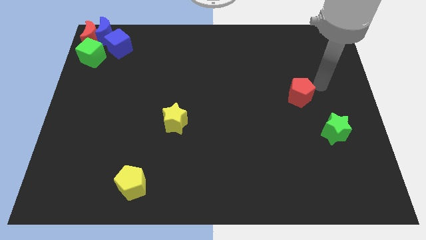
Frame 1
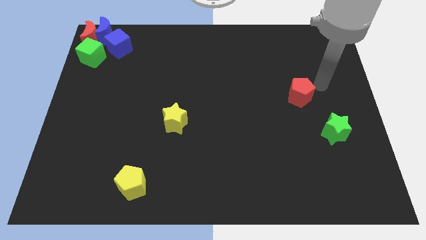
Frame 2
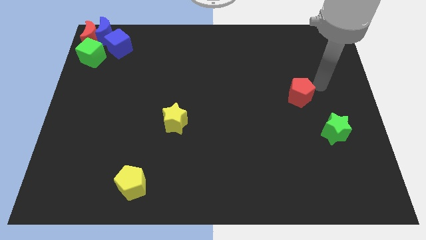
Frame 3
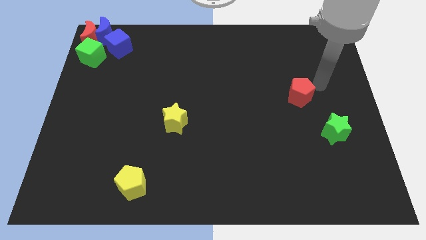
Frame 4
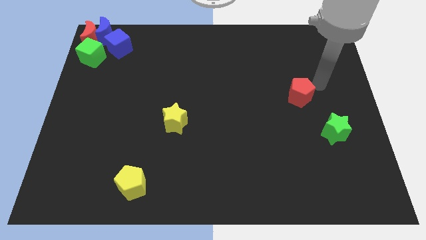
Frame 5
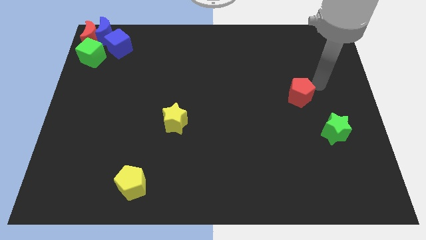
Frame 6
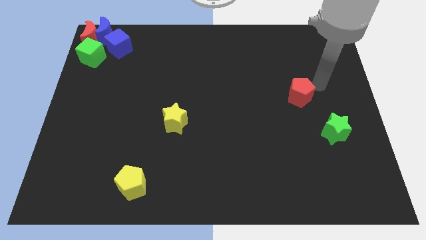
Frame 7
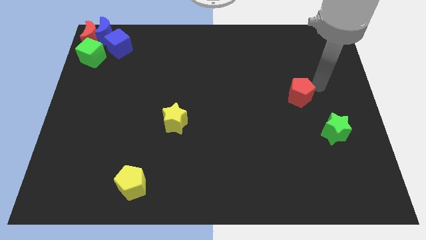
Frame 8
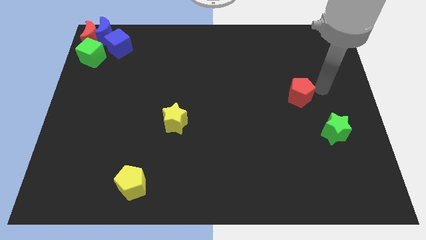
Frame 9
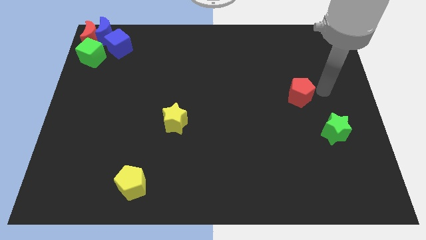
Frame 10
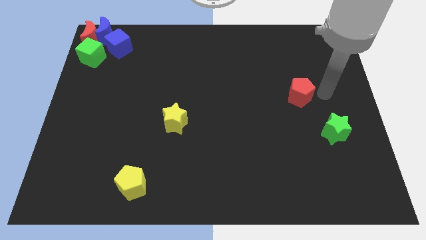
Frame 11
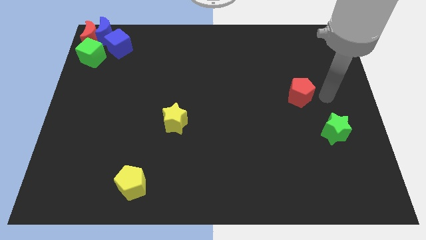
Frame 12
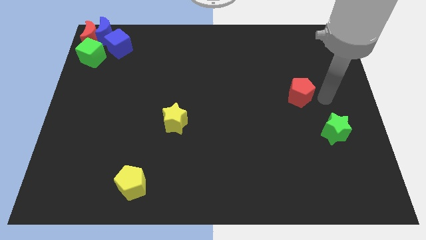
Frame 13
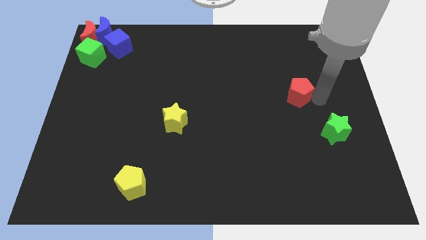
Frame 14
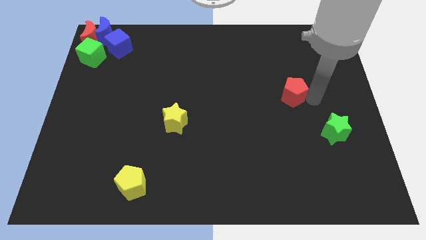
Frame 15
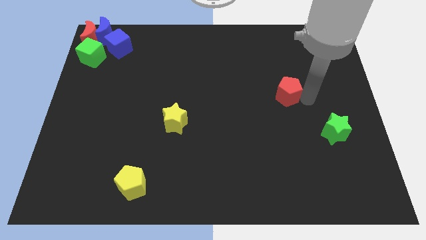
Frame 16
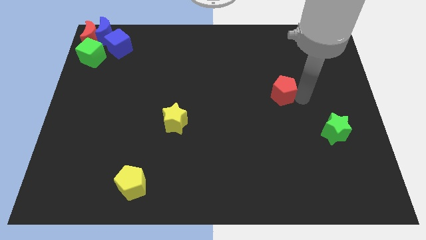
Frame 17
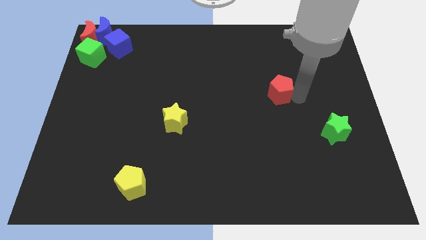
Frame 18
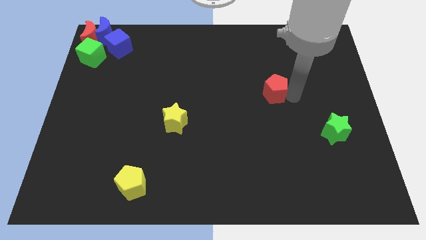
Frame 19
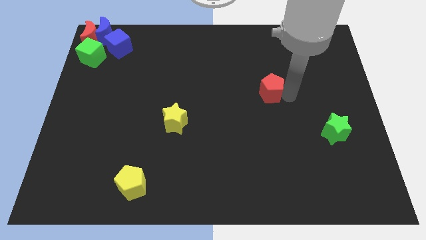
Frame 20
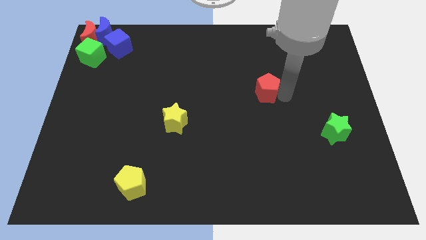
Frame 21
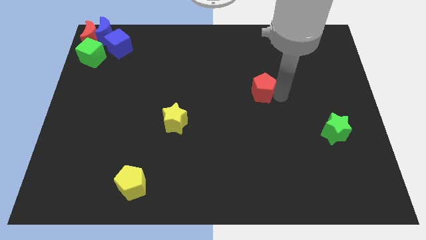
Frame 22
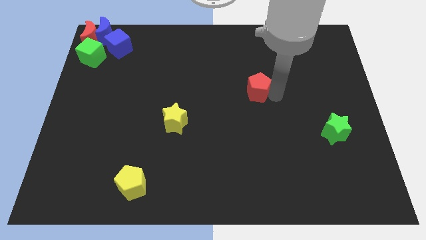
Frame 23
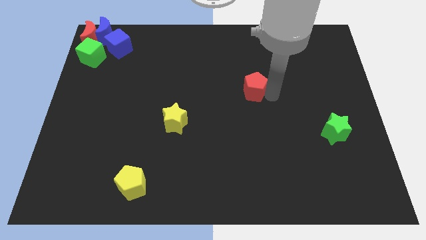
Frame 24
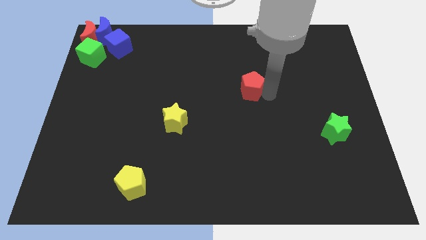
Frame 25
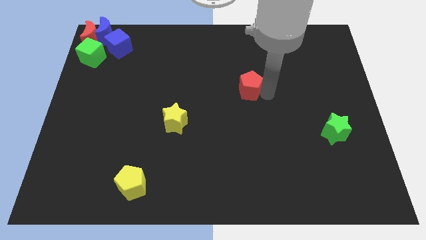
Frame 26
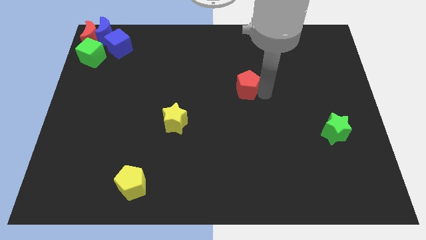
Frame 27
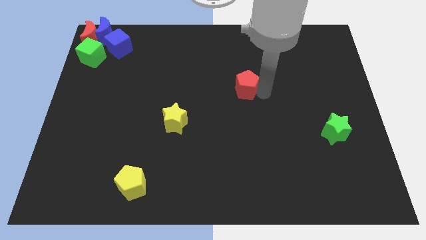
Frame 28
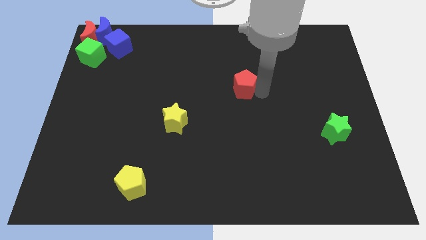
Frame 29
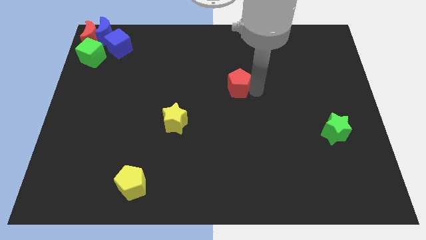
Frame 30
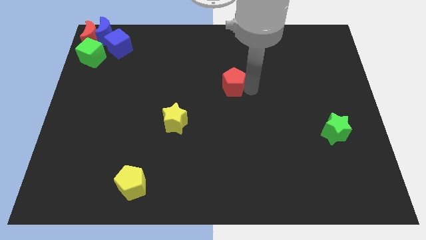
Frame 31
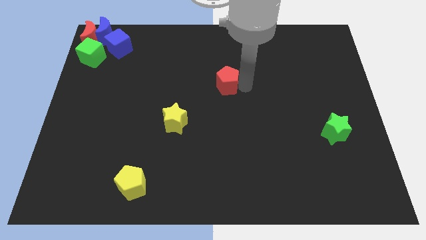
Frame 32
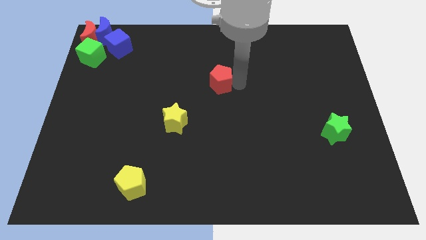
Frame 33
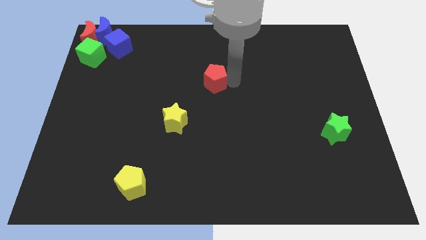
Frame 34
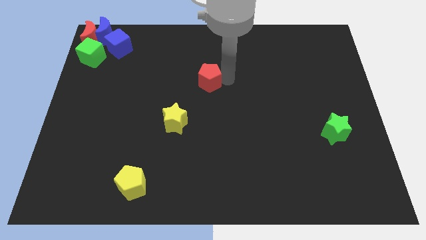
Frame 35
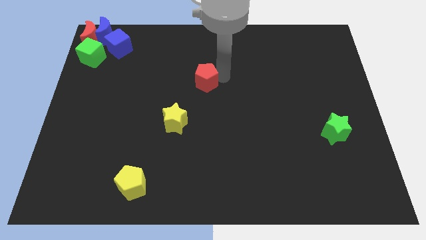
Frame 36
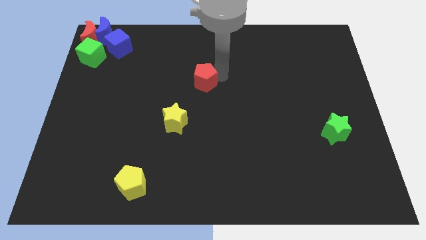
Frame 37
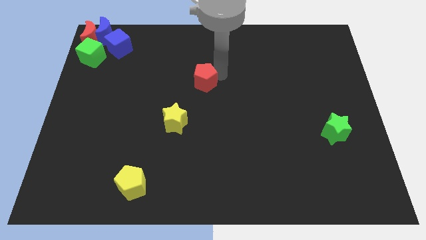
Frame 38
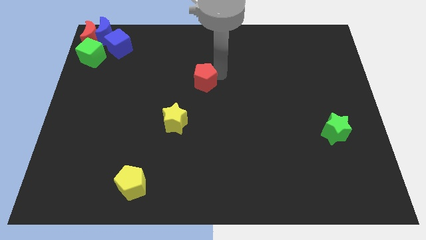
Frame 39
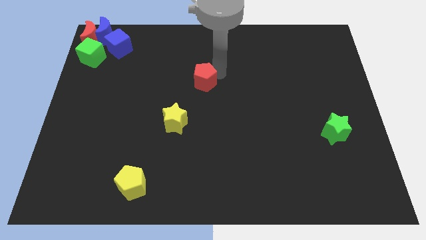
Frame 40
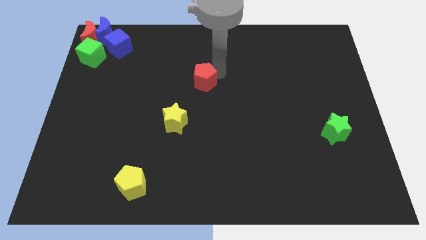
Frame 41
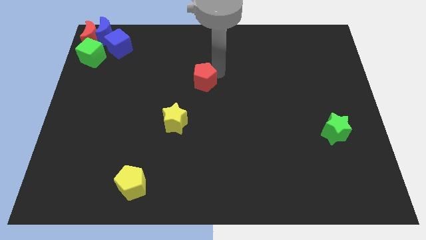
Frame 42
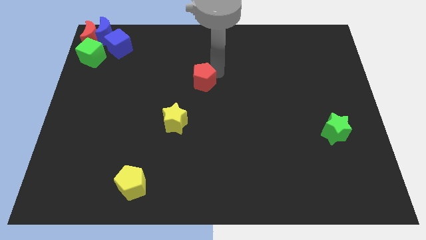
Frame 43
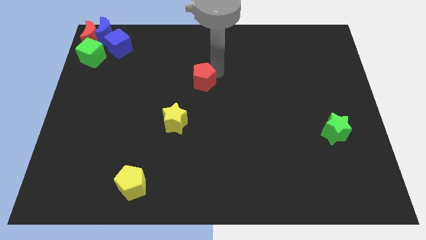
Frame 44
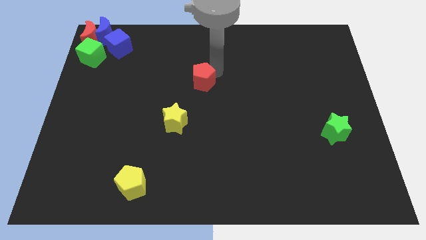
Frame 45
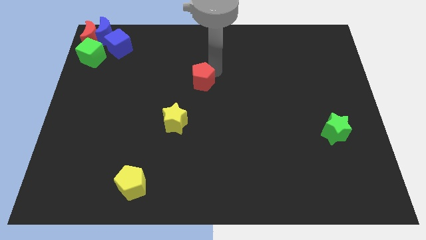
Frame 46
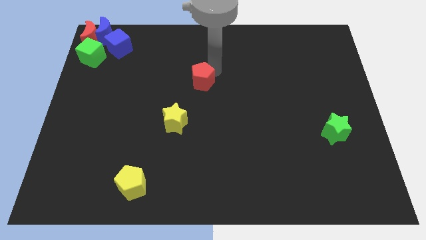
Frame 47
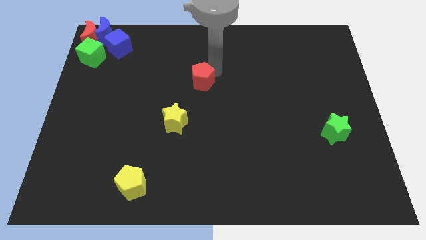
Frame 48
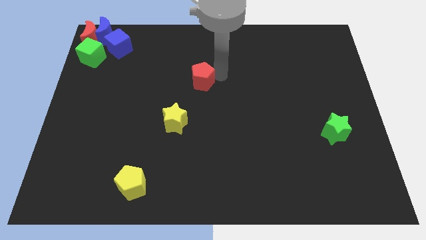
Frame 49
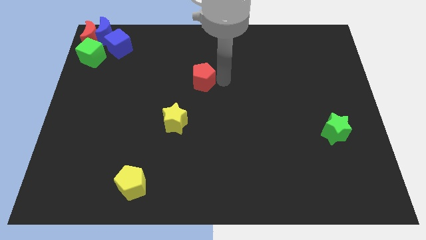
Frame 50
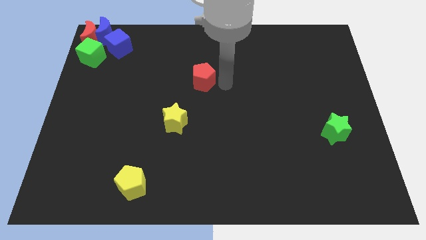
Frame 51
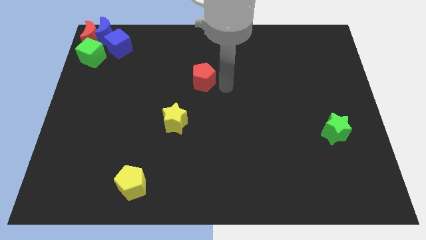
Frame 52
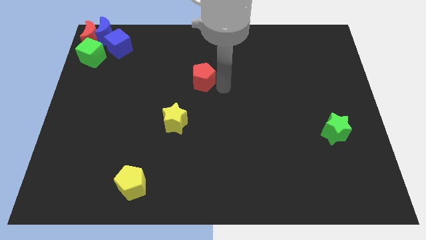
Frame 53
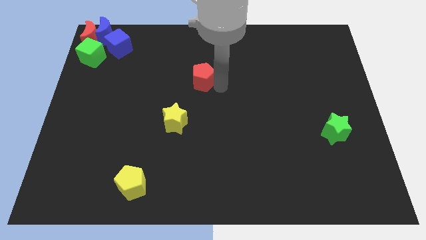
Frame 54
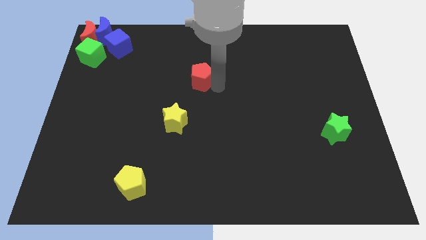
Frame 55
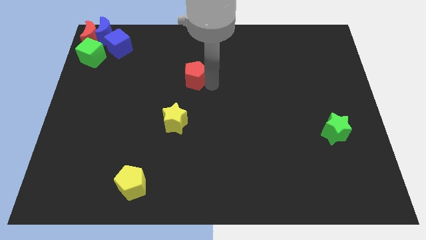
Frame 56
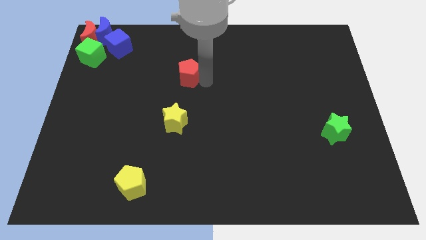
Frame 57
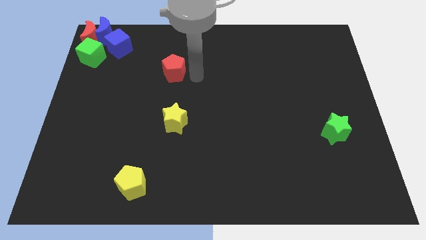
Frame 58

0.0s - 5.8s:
place the red pentagon vertically above the yellow star

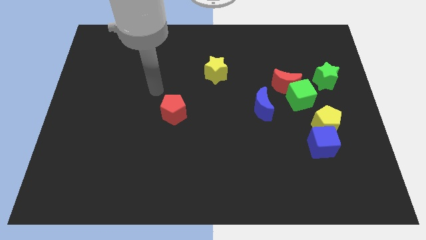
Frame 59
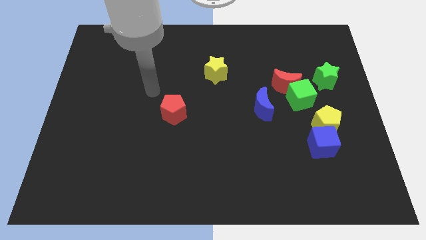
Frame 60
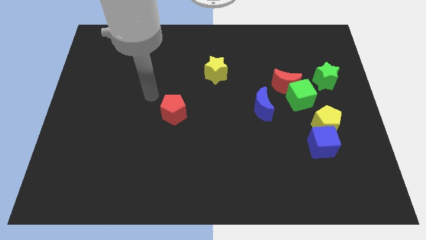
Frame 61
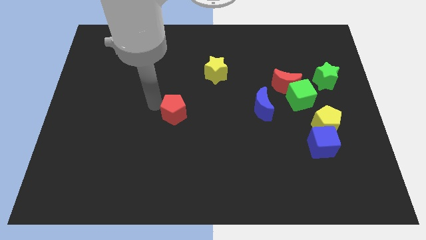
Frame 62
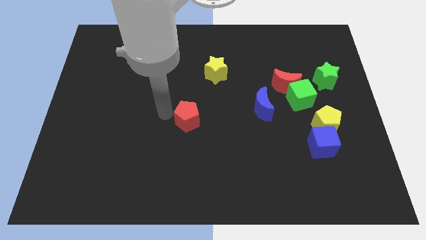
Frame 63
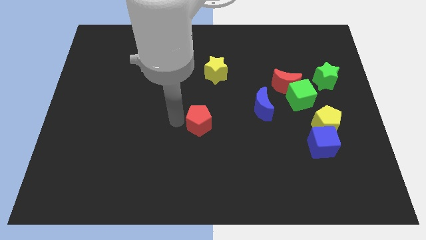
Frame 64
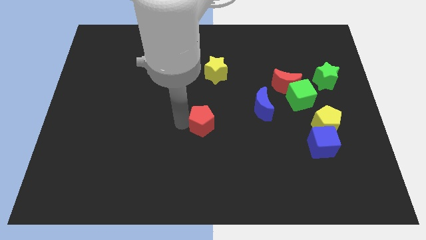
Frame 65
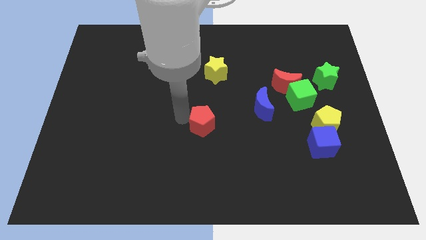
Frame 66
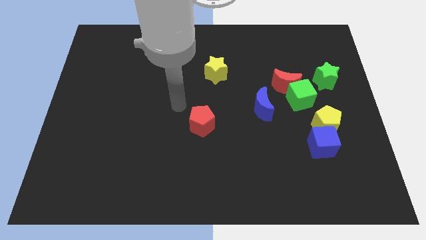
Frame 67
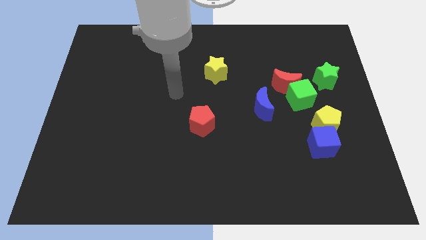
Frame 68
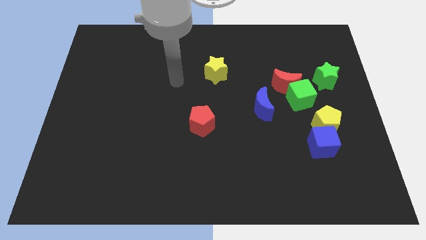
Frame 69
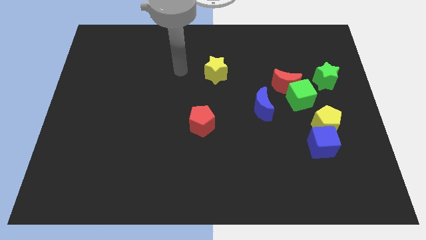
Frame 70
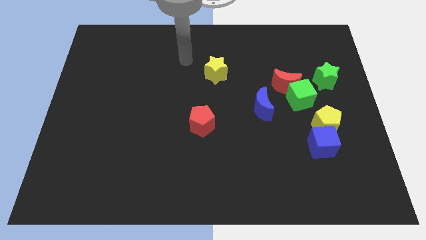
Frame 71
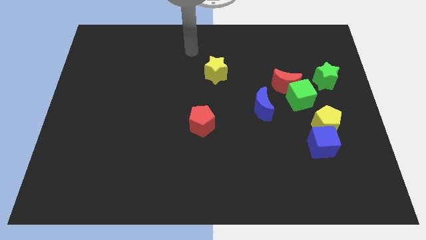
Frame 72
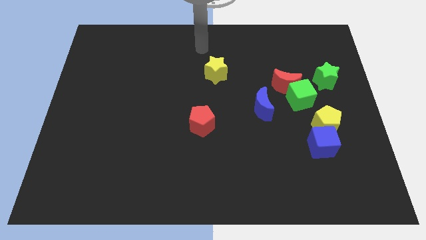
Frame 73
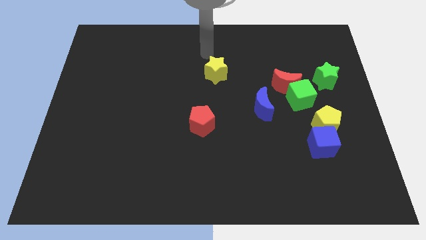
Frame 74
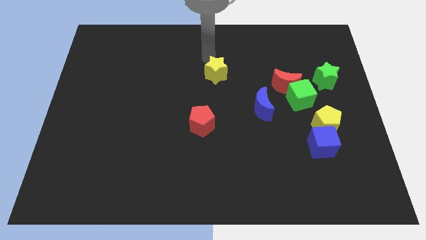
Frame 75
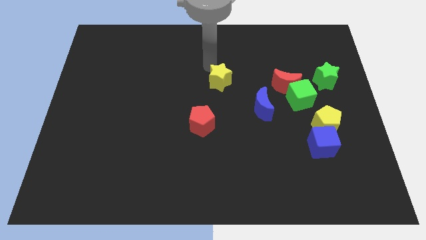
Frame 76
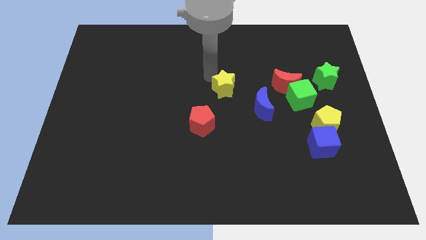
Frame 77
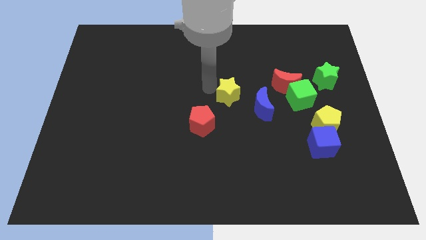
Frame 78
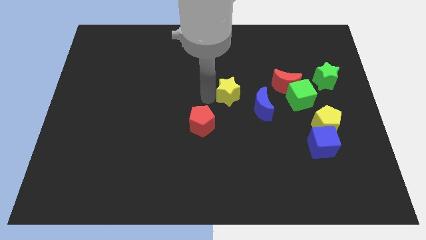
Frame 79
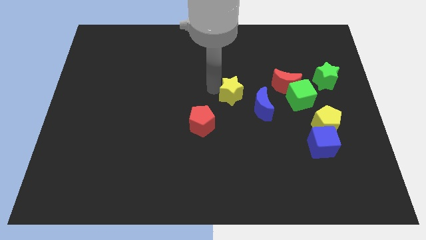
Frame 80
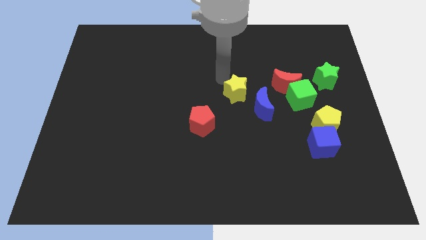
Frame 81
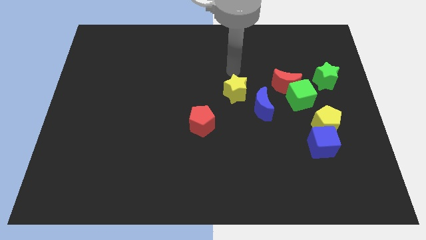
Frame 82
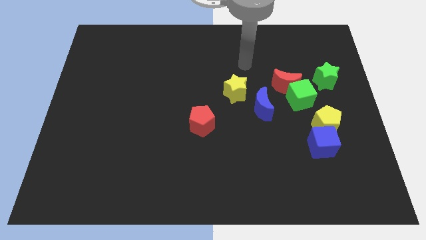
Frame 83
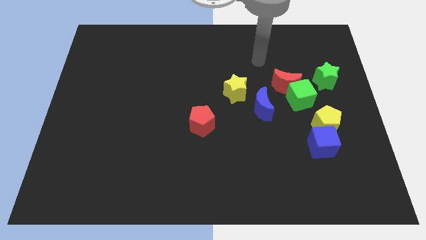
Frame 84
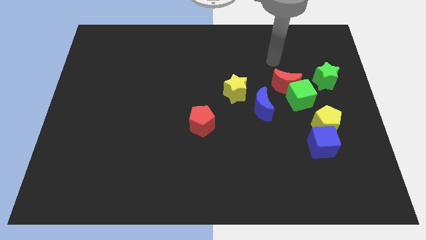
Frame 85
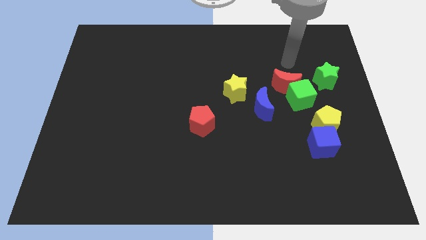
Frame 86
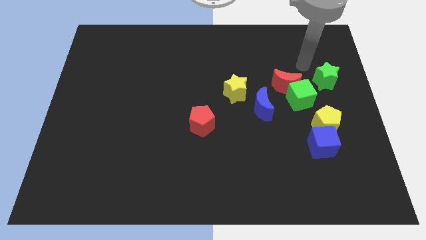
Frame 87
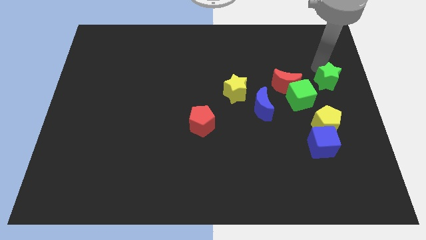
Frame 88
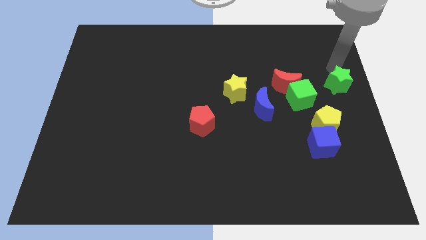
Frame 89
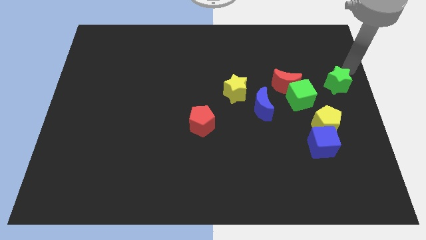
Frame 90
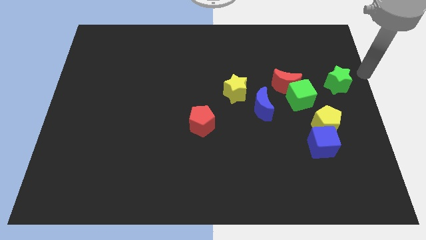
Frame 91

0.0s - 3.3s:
place the yellow star diagonally to the left of the blue moon
